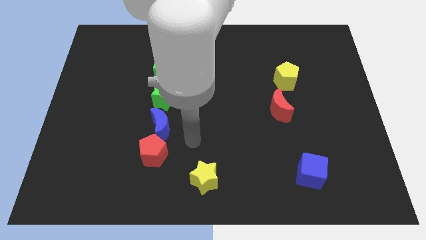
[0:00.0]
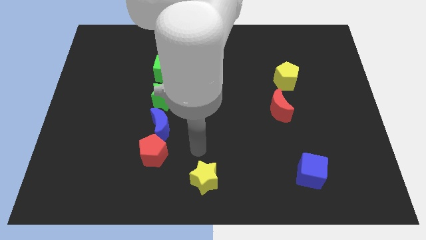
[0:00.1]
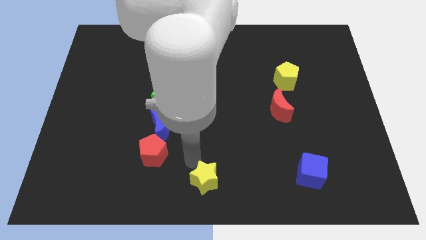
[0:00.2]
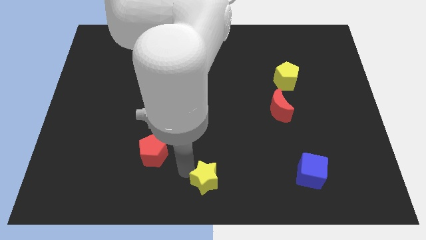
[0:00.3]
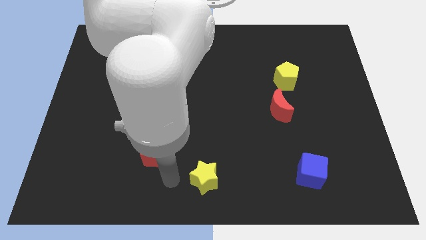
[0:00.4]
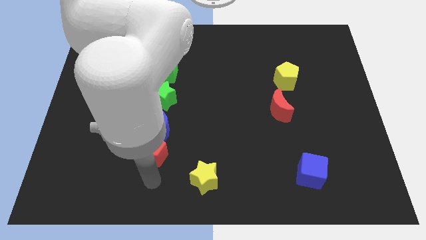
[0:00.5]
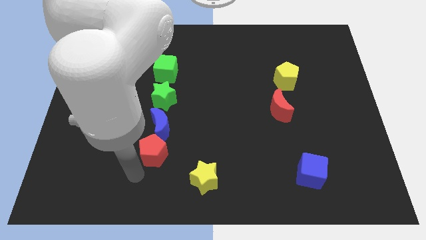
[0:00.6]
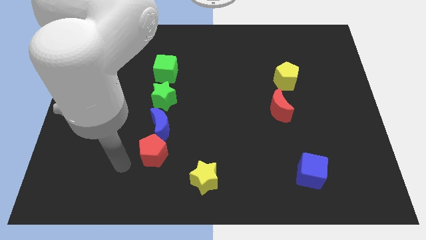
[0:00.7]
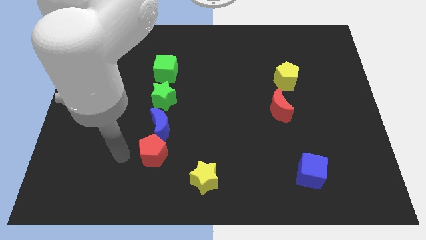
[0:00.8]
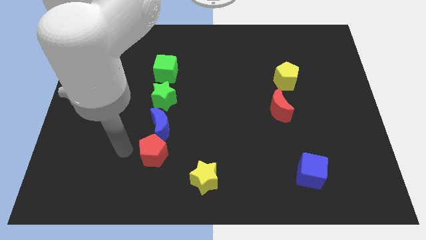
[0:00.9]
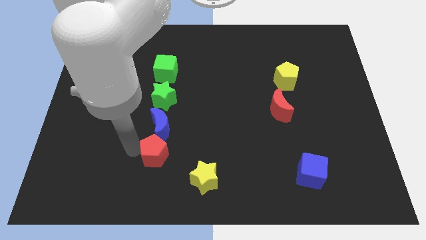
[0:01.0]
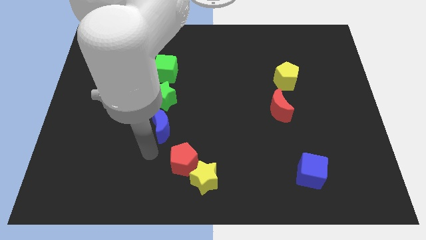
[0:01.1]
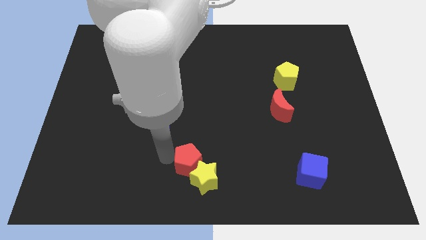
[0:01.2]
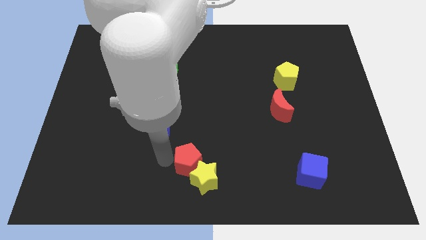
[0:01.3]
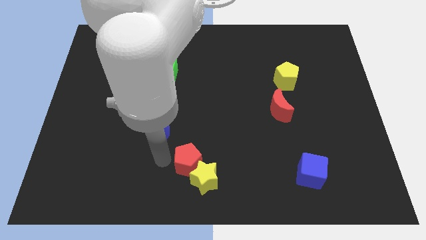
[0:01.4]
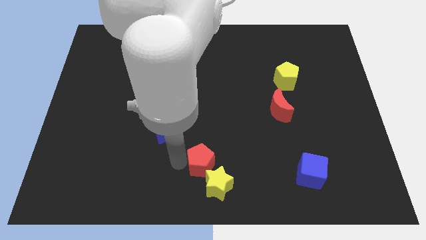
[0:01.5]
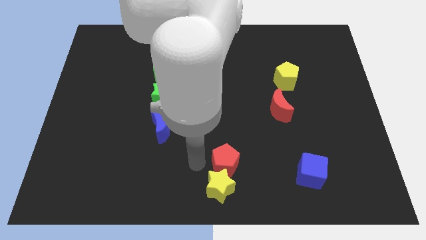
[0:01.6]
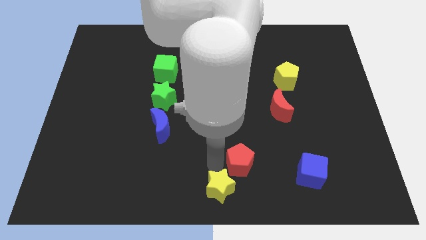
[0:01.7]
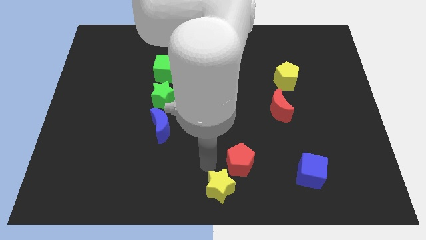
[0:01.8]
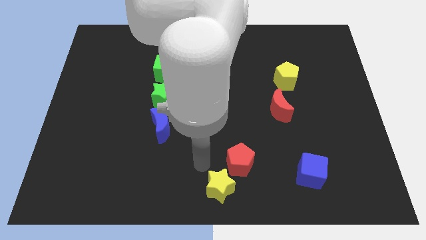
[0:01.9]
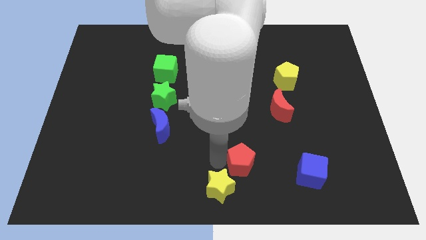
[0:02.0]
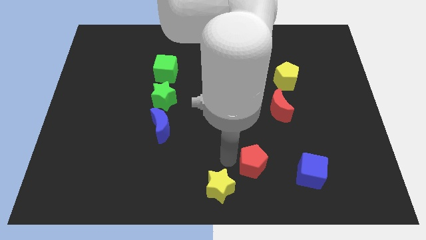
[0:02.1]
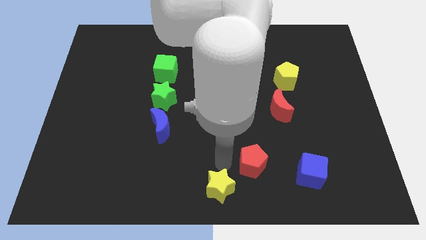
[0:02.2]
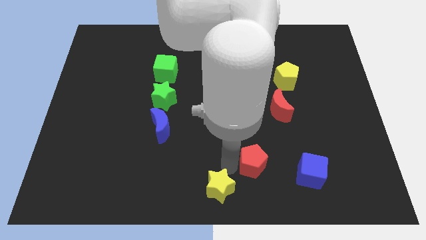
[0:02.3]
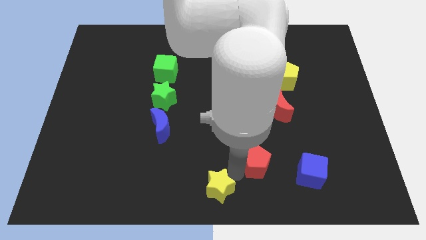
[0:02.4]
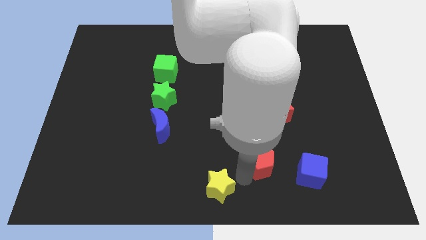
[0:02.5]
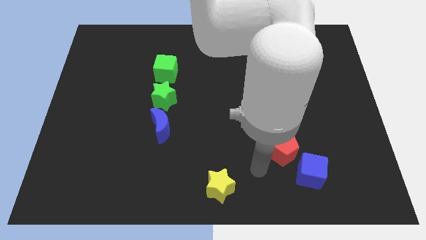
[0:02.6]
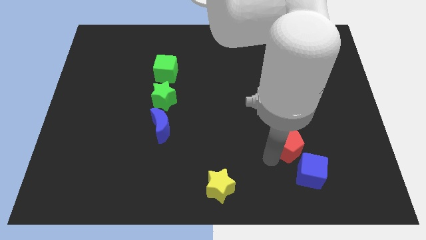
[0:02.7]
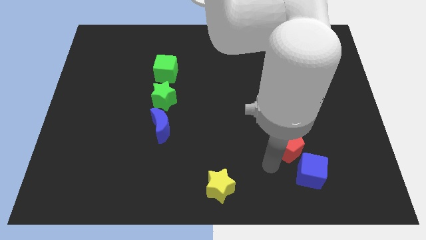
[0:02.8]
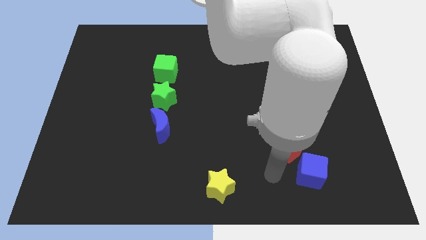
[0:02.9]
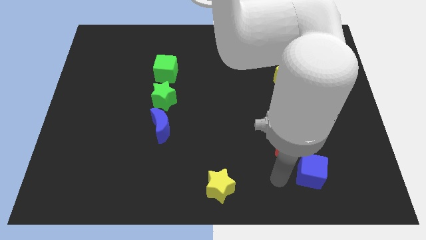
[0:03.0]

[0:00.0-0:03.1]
move away the red pentagon from blue crescent

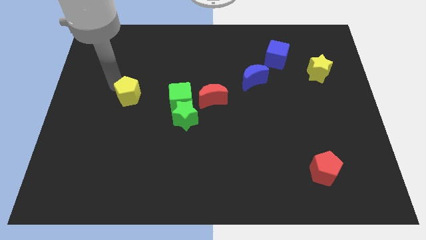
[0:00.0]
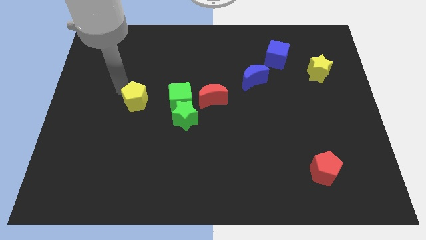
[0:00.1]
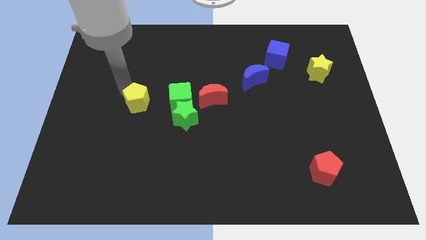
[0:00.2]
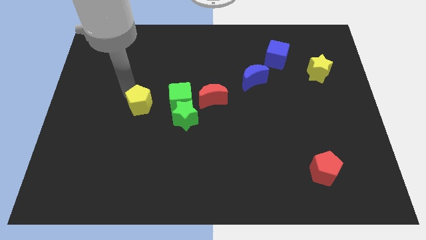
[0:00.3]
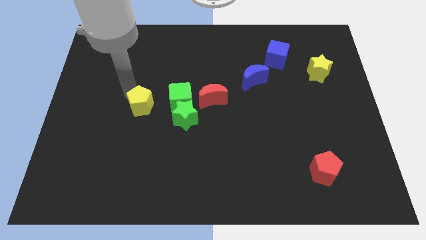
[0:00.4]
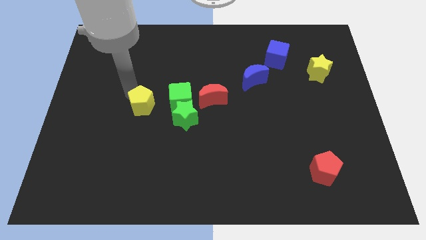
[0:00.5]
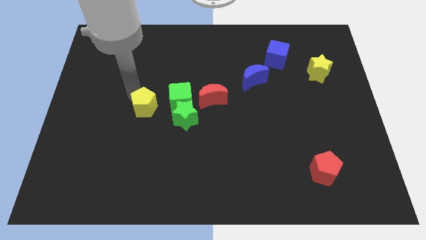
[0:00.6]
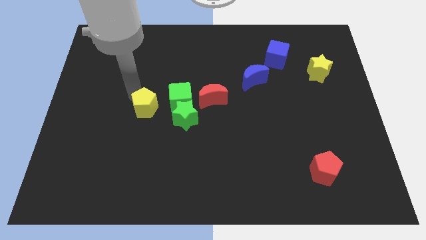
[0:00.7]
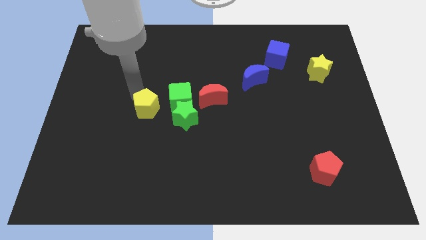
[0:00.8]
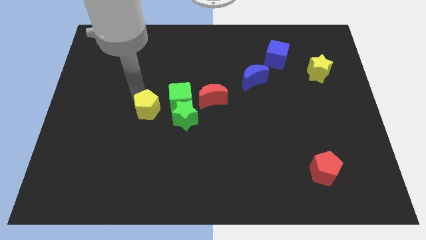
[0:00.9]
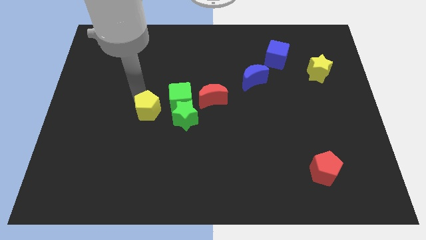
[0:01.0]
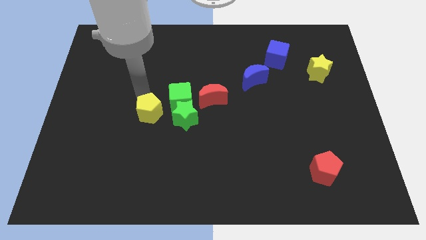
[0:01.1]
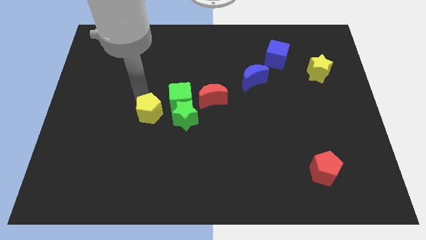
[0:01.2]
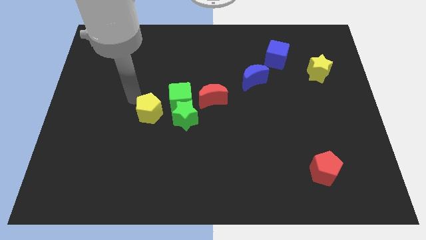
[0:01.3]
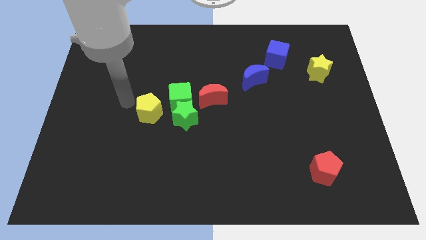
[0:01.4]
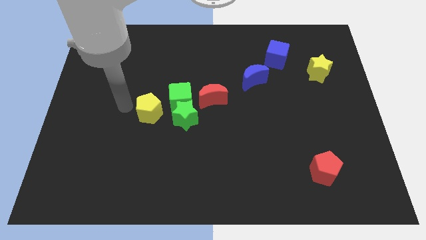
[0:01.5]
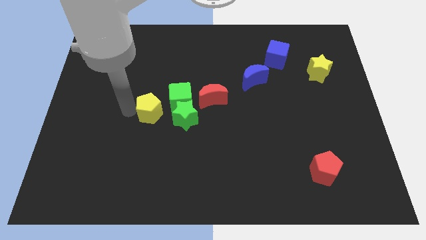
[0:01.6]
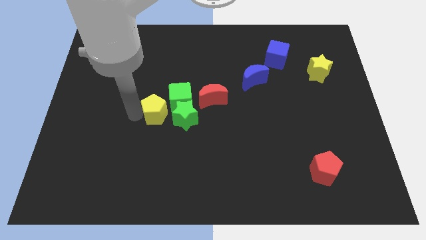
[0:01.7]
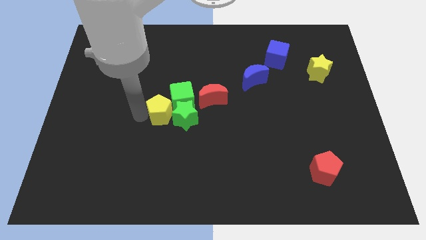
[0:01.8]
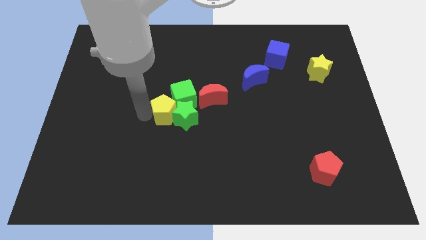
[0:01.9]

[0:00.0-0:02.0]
move the yellow pentagon to the left of the green star

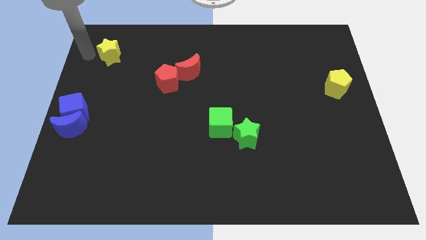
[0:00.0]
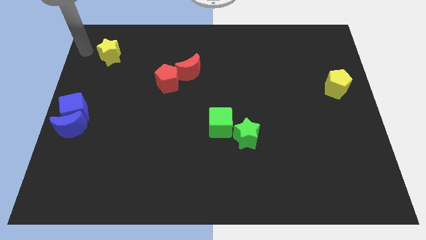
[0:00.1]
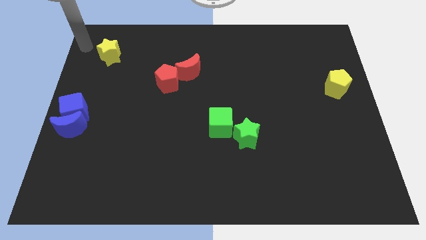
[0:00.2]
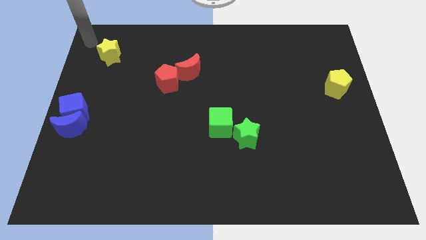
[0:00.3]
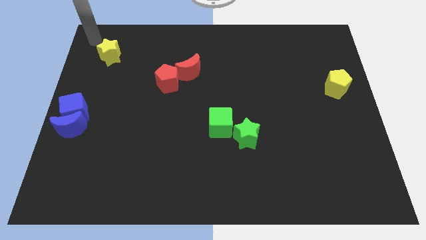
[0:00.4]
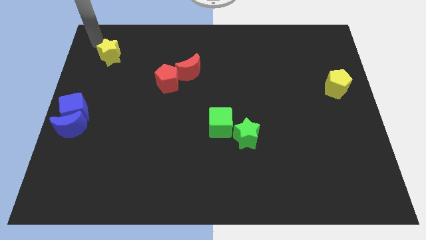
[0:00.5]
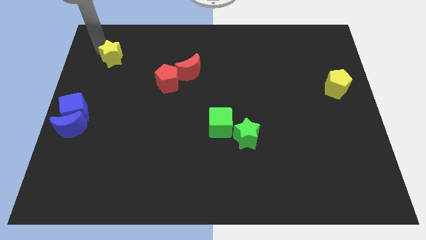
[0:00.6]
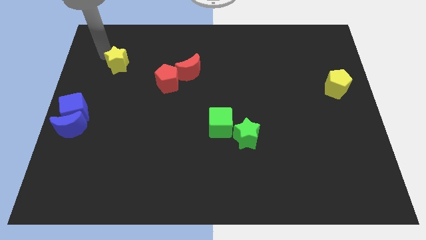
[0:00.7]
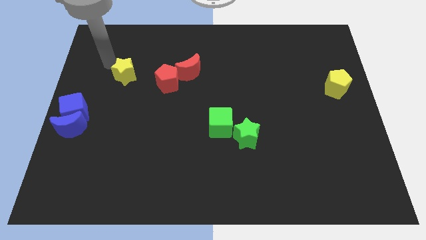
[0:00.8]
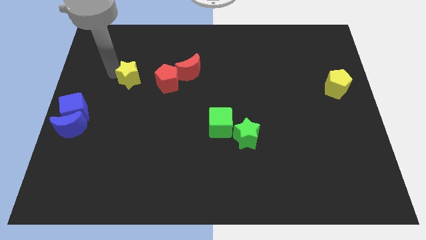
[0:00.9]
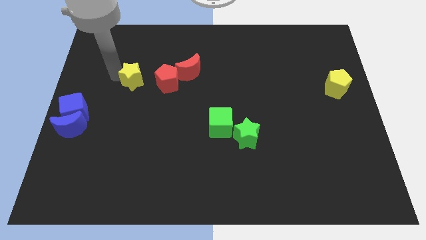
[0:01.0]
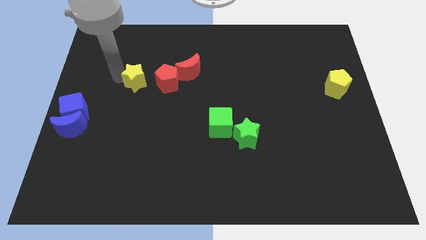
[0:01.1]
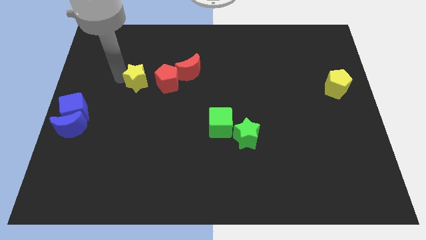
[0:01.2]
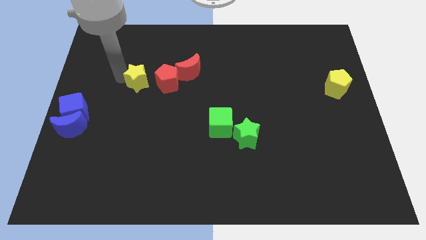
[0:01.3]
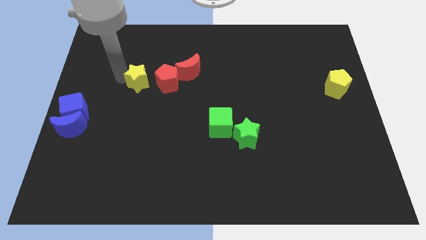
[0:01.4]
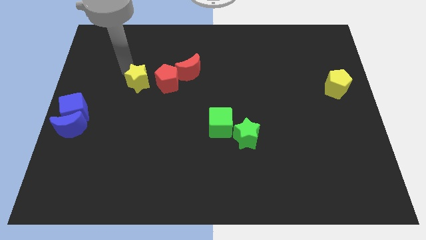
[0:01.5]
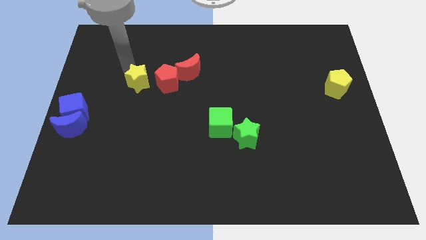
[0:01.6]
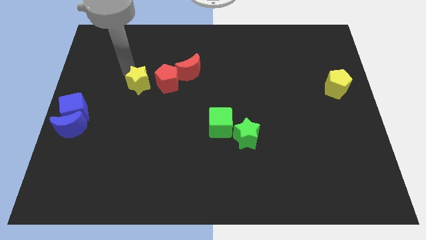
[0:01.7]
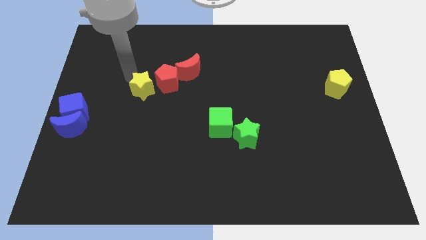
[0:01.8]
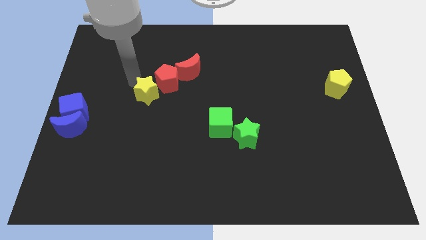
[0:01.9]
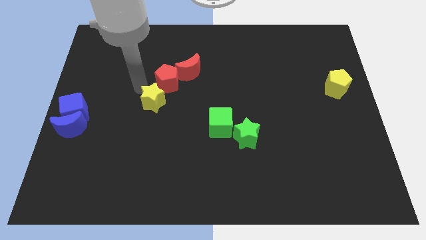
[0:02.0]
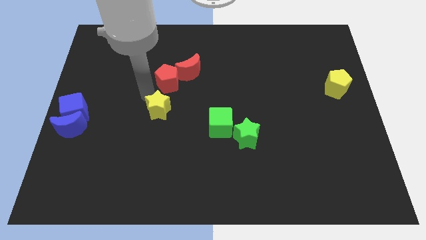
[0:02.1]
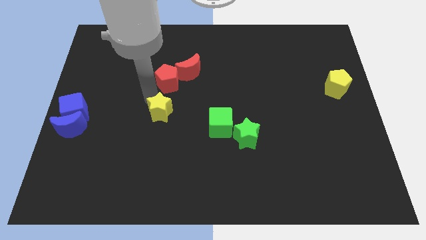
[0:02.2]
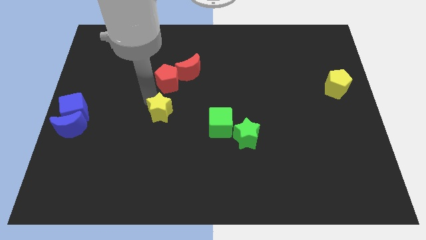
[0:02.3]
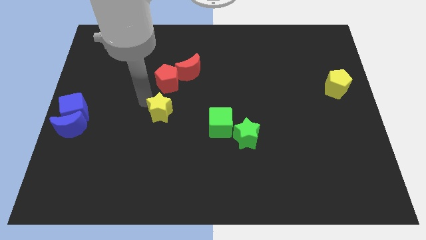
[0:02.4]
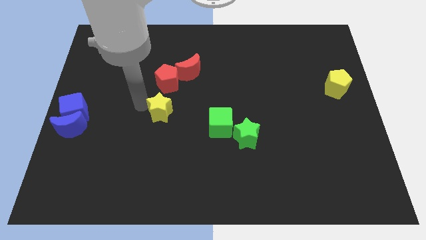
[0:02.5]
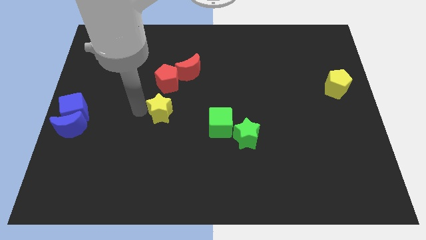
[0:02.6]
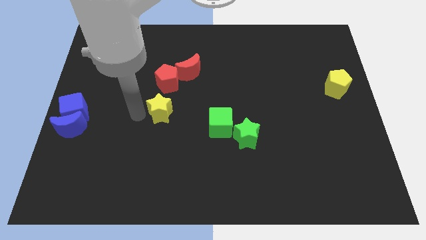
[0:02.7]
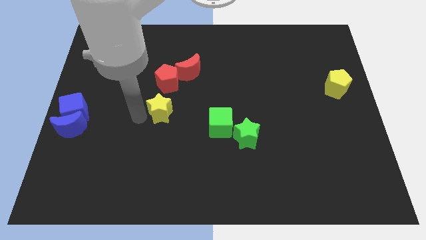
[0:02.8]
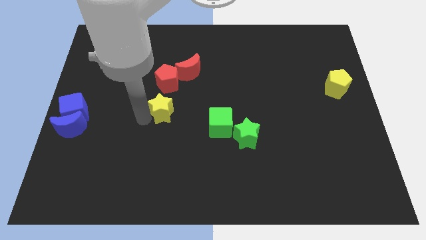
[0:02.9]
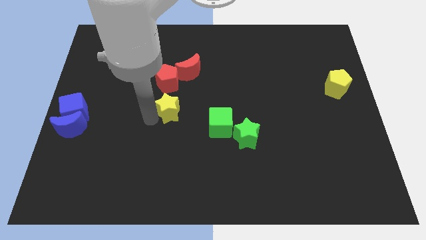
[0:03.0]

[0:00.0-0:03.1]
place the yellow star below the red pentagon

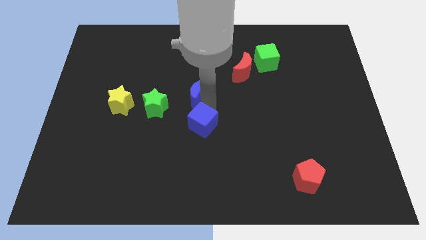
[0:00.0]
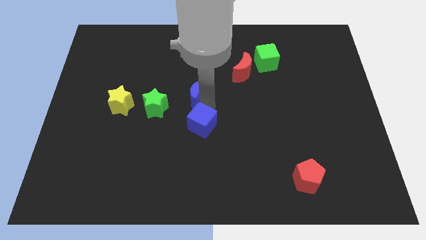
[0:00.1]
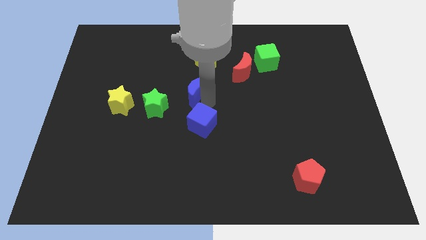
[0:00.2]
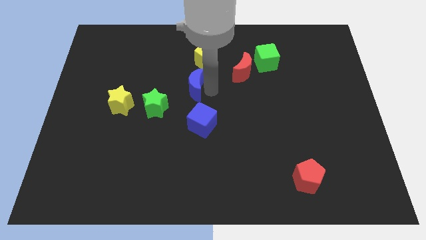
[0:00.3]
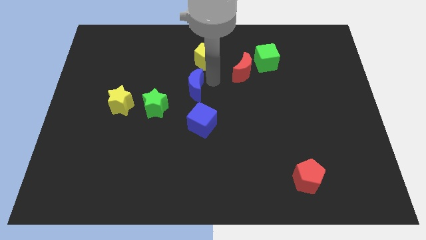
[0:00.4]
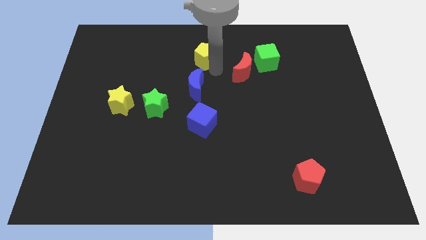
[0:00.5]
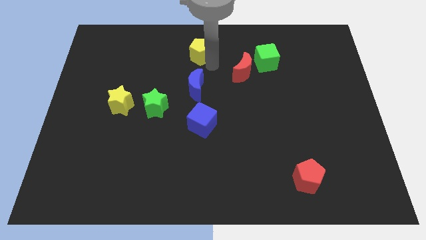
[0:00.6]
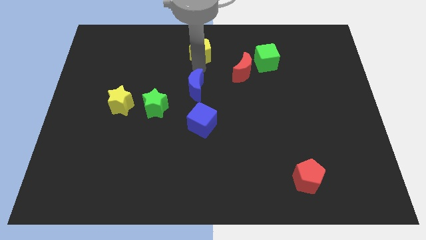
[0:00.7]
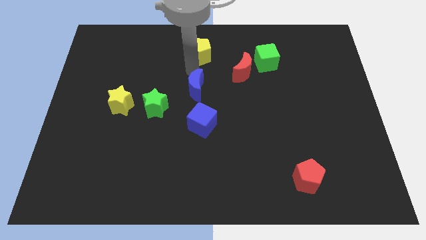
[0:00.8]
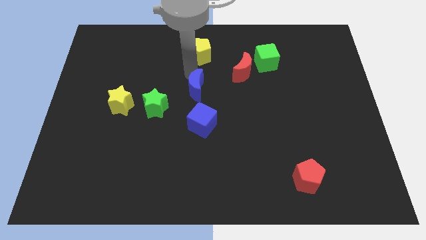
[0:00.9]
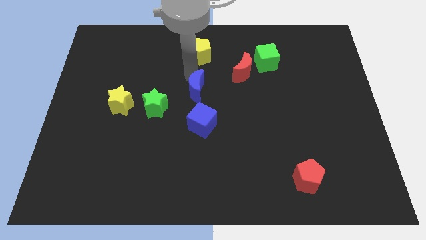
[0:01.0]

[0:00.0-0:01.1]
make a vertical line with the blue crescent yellow pentagon and blue cube
